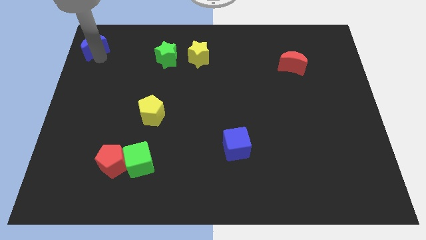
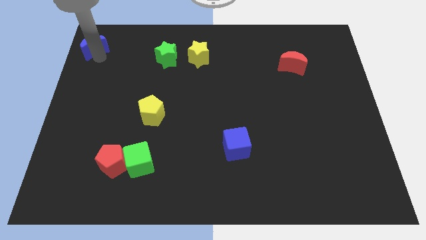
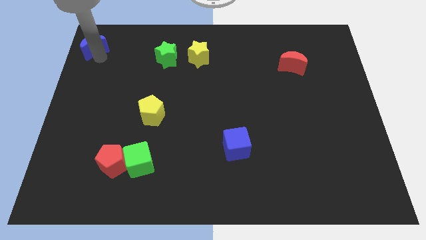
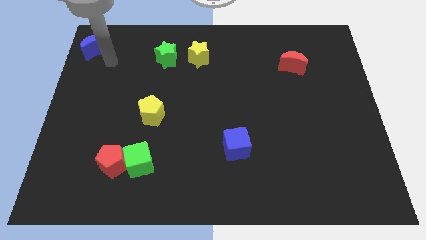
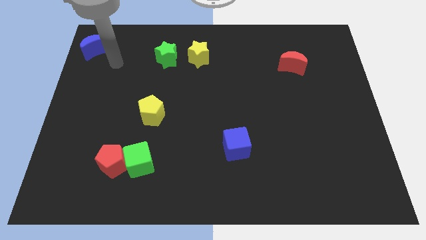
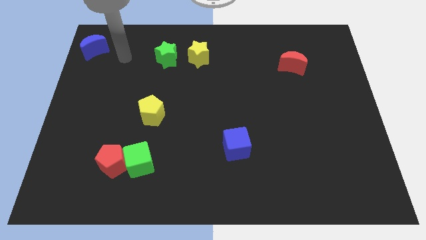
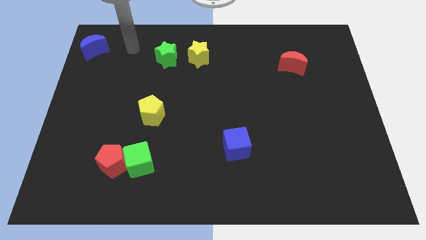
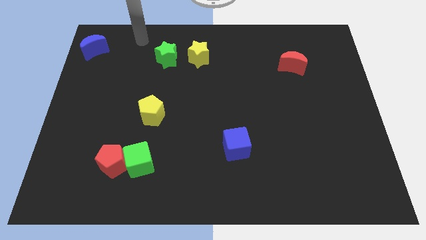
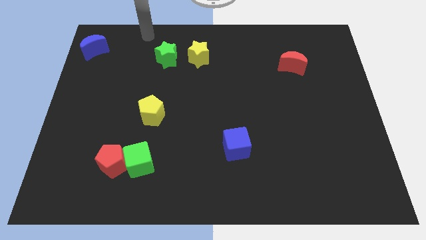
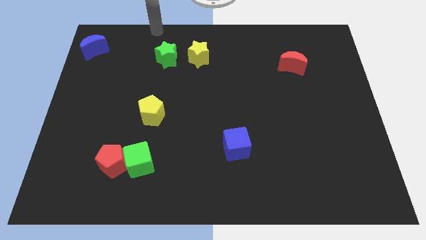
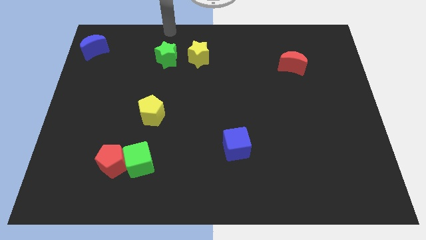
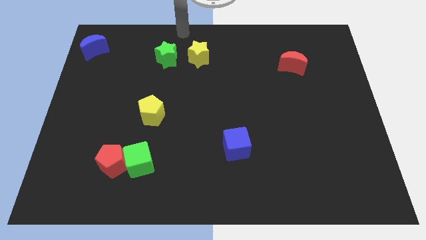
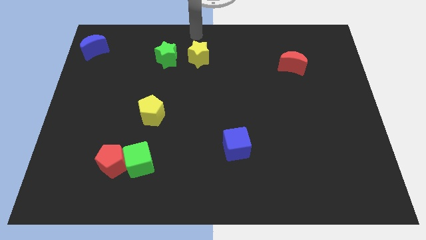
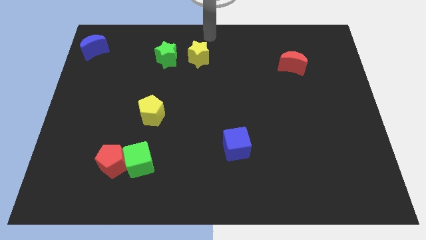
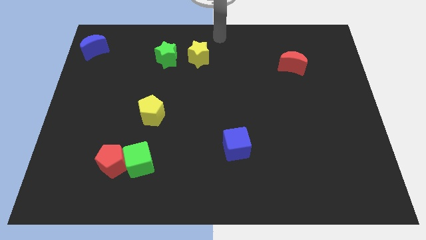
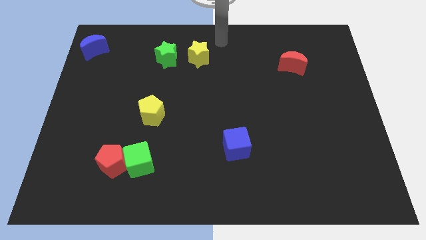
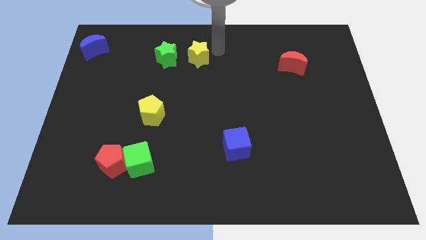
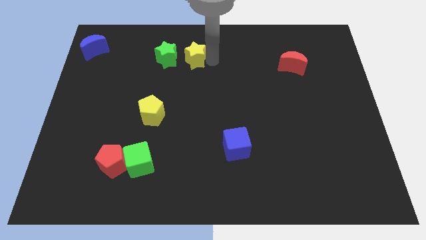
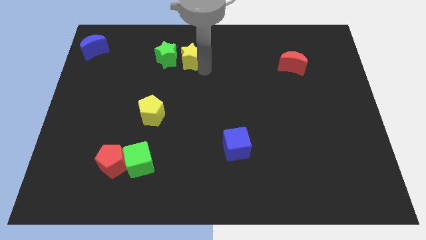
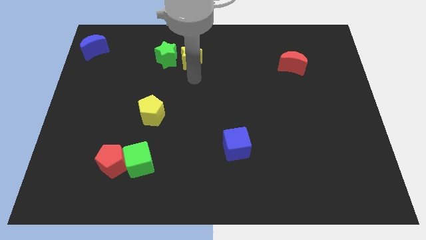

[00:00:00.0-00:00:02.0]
push the yellow star slightly to the left

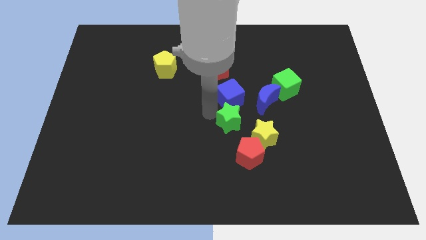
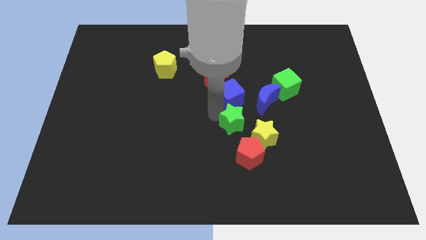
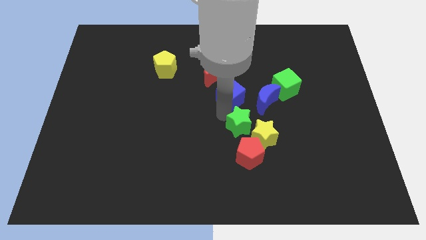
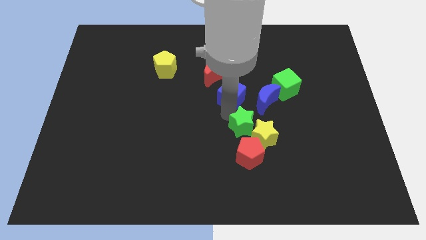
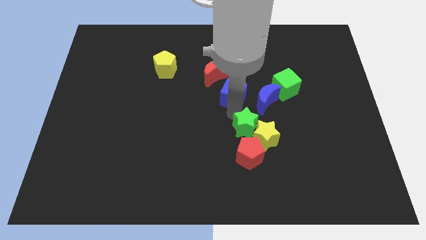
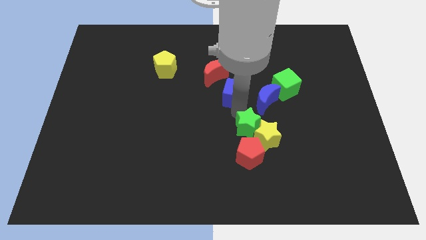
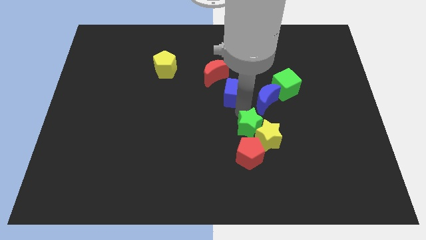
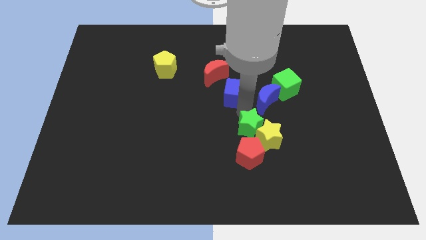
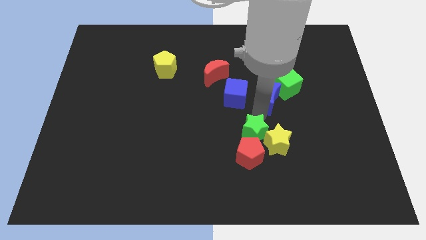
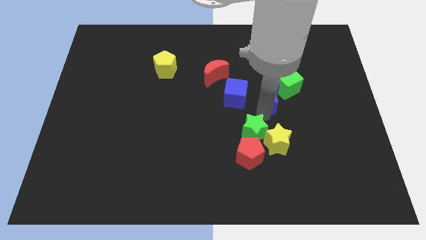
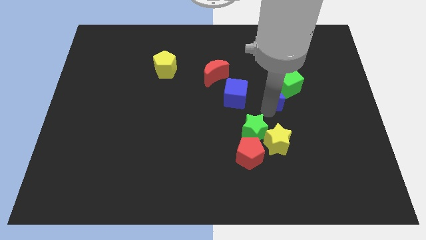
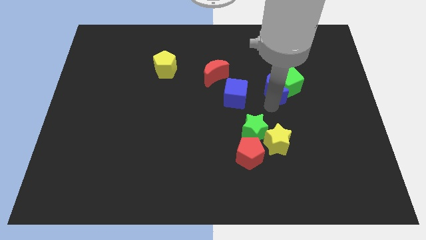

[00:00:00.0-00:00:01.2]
push the green star into the yellow star

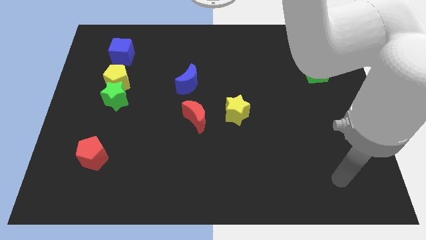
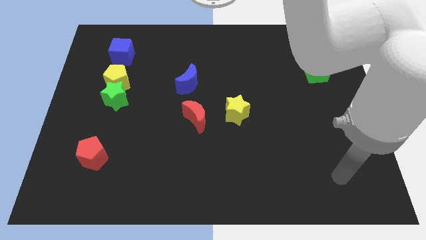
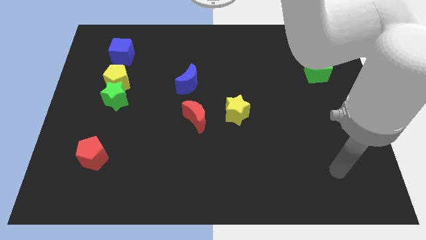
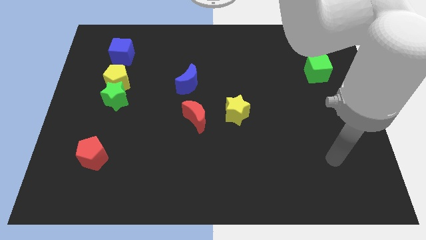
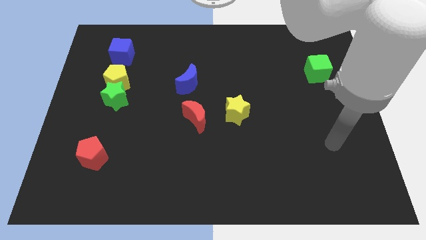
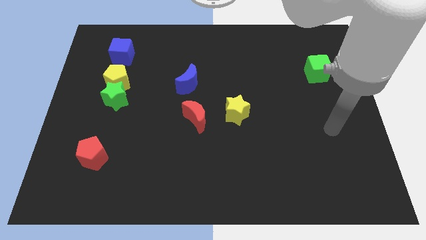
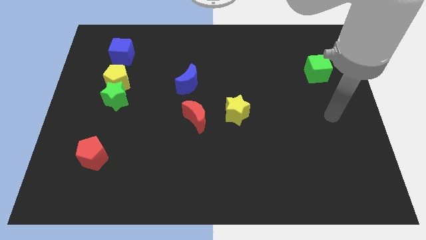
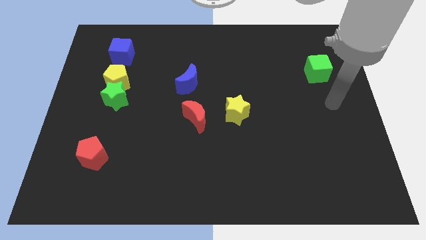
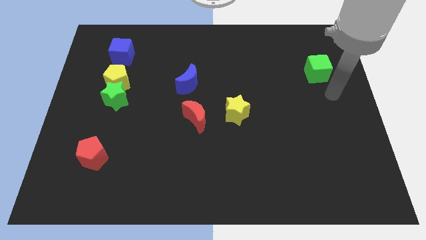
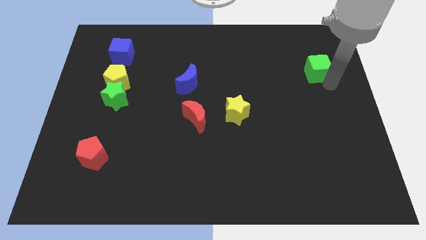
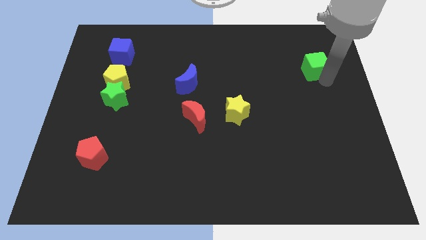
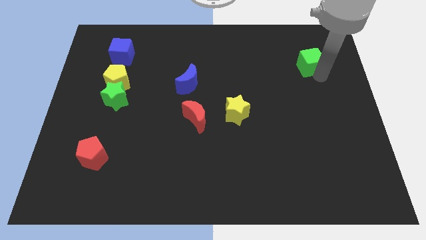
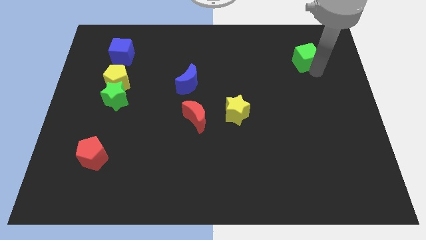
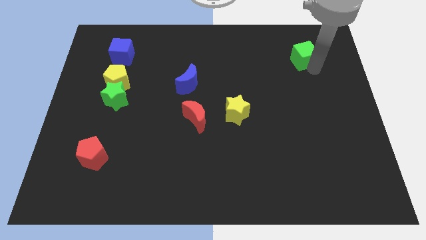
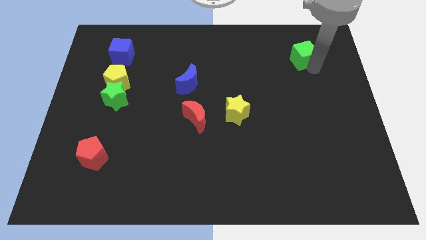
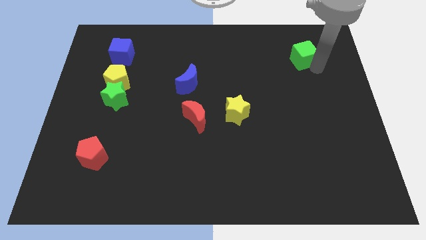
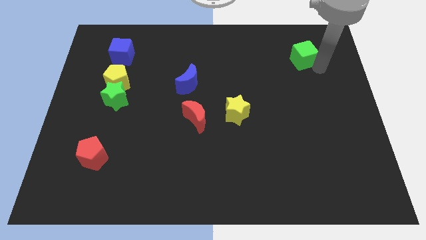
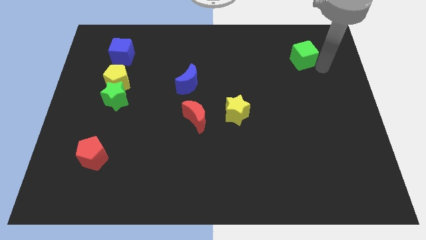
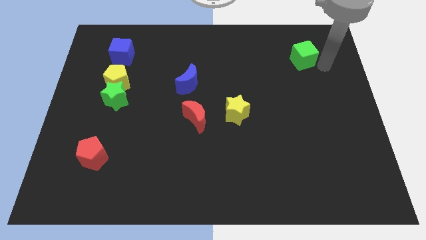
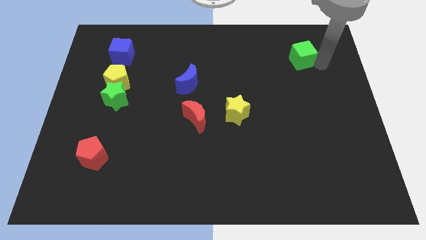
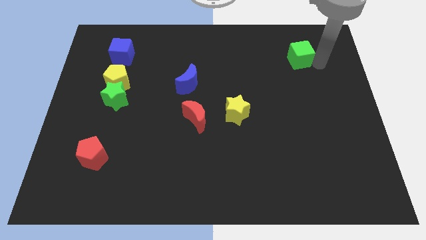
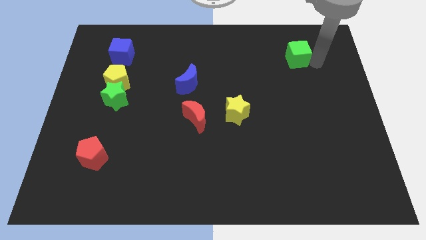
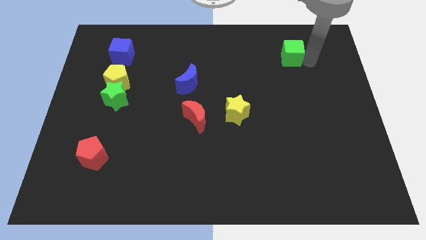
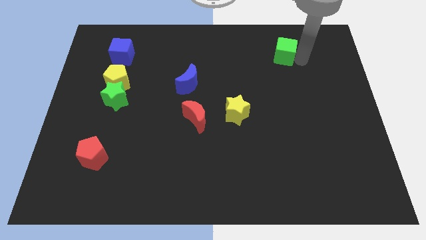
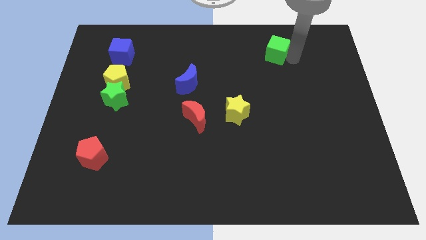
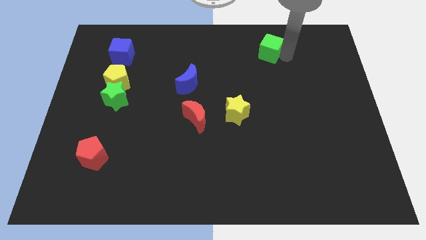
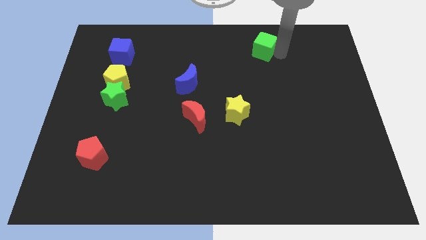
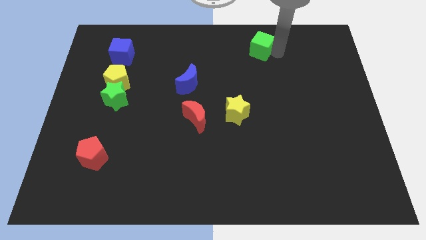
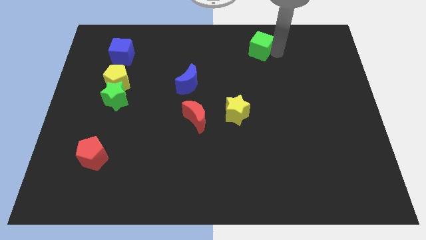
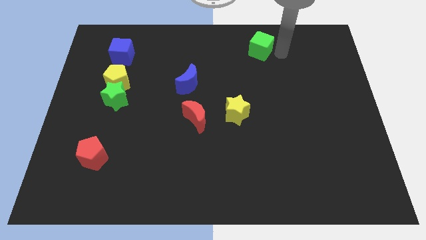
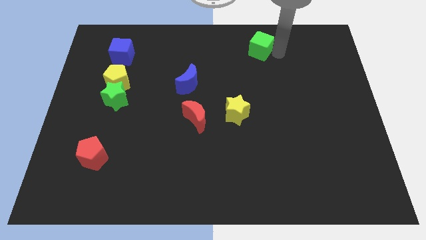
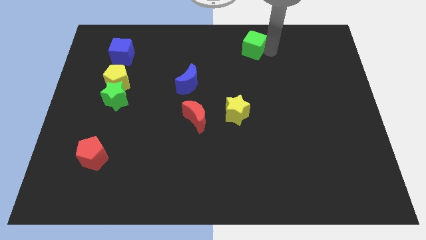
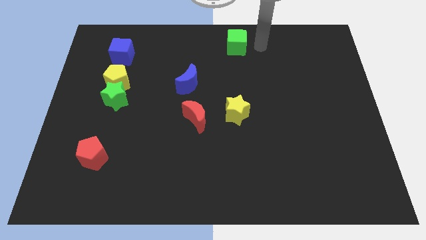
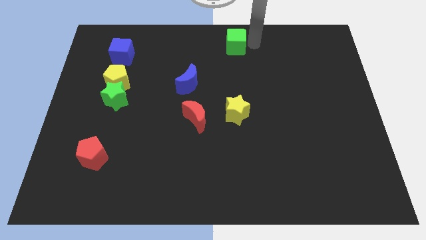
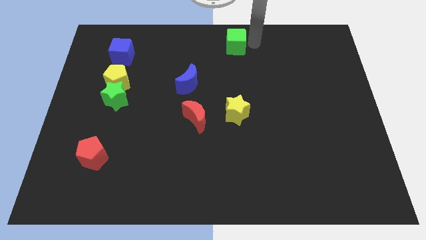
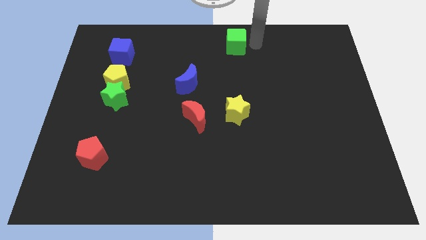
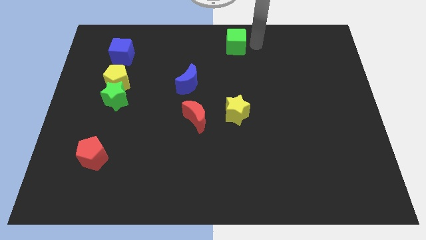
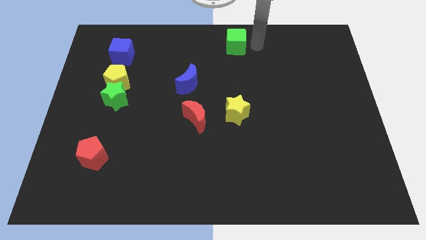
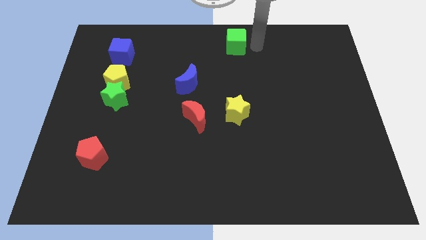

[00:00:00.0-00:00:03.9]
slide the green cube to the top center

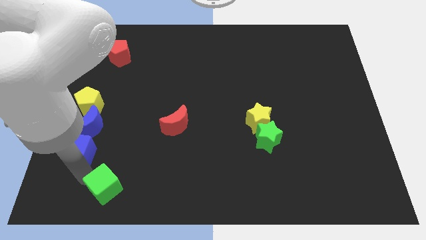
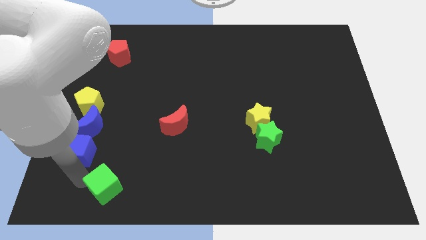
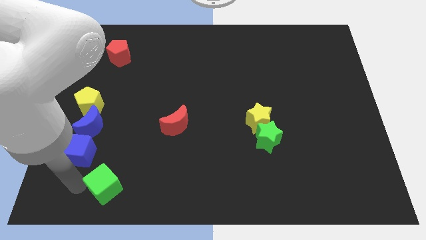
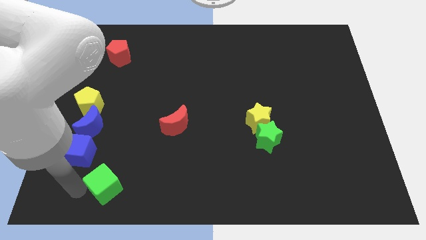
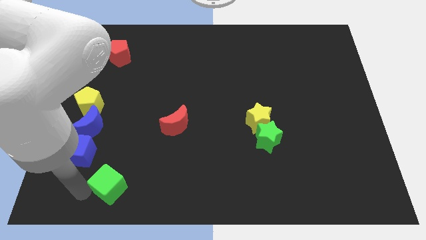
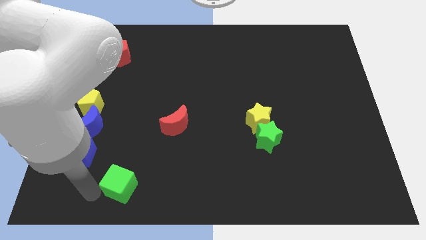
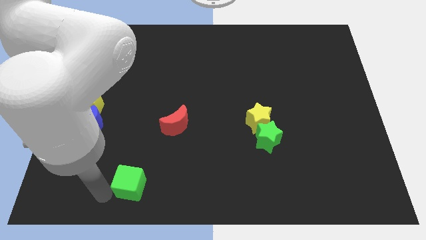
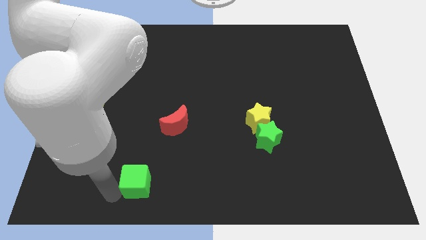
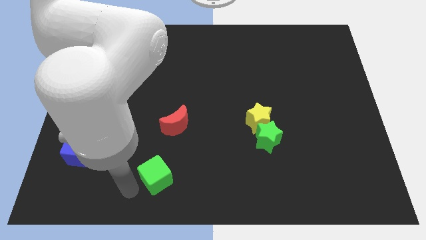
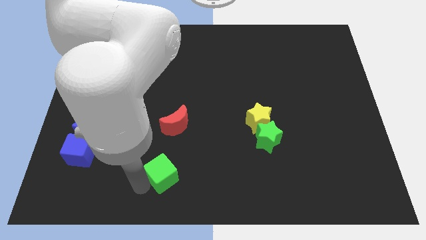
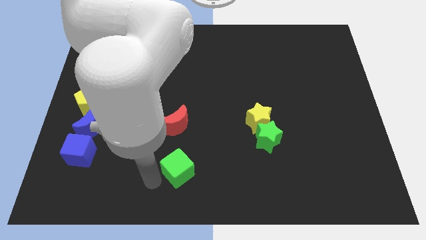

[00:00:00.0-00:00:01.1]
place green cube vertically below the red moon

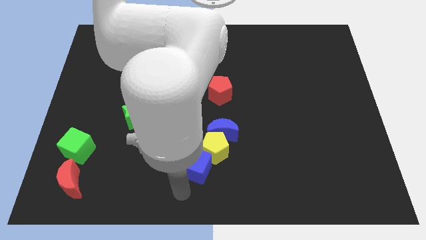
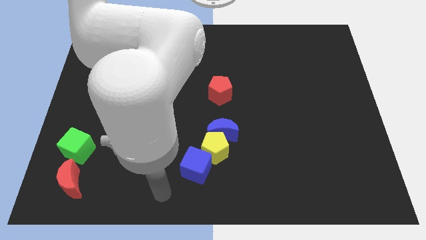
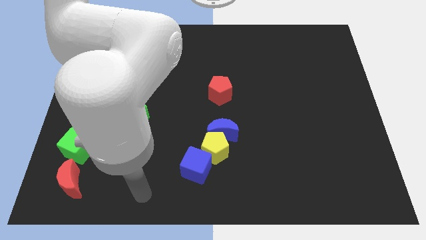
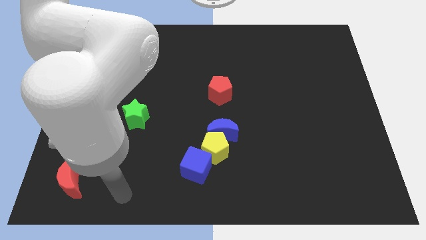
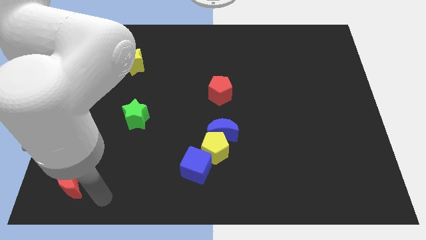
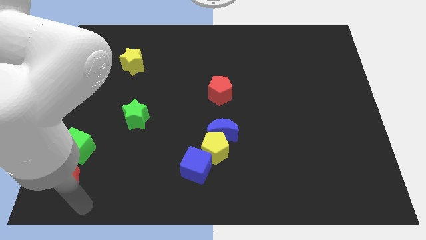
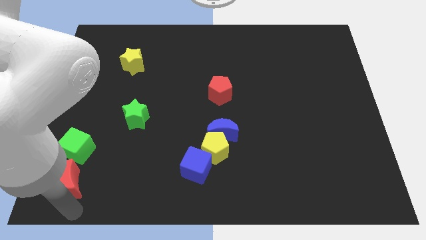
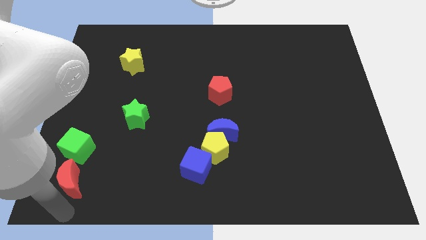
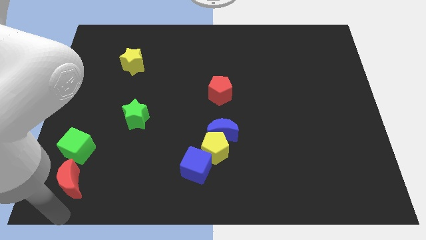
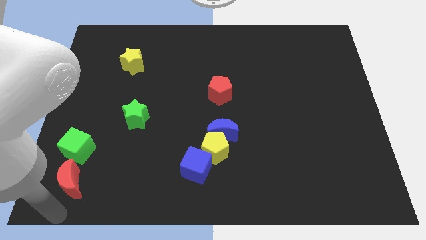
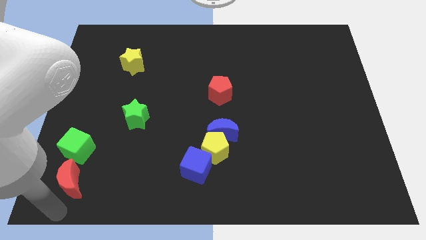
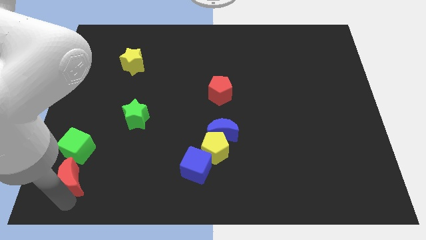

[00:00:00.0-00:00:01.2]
move the arm towards the bottom of the red crescent
